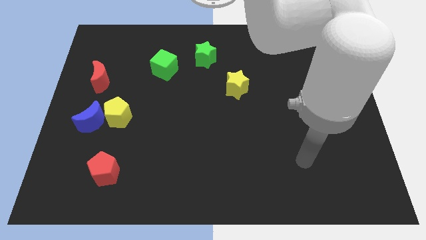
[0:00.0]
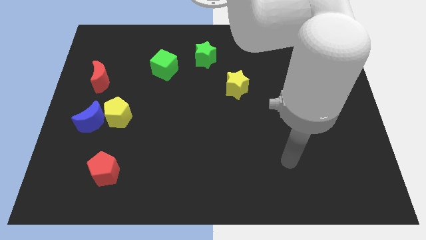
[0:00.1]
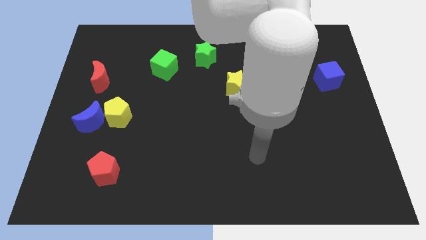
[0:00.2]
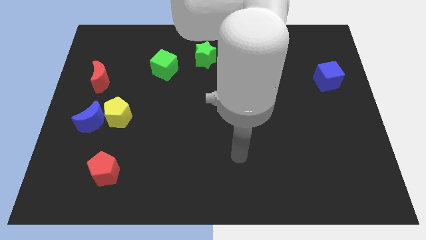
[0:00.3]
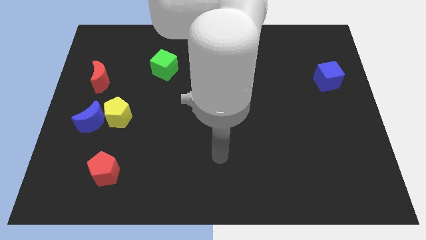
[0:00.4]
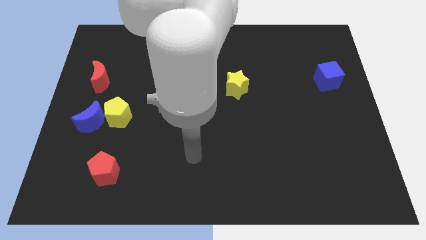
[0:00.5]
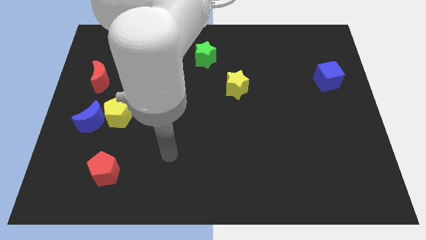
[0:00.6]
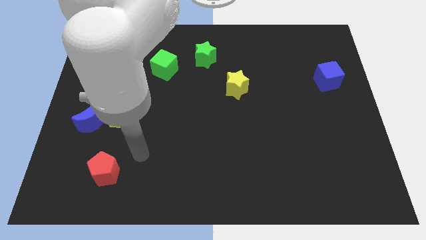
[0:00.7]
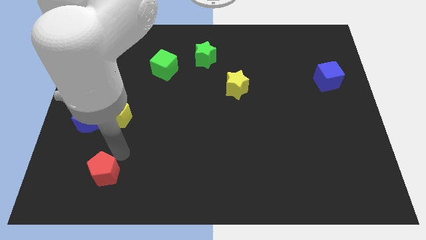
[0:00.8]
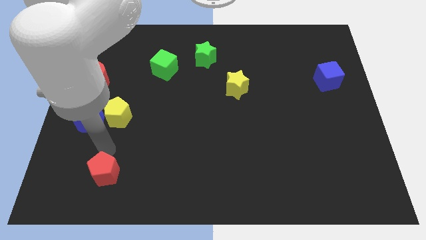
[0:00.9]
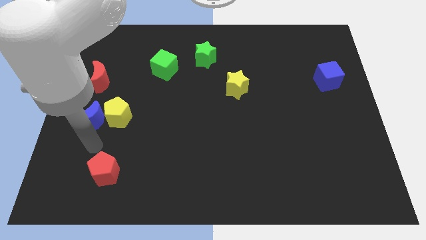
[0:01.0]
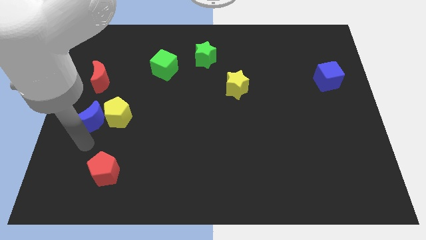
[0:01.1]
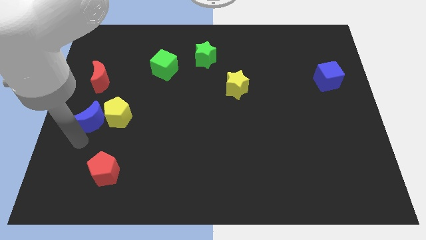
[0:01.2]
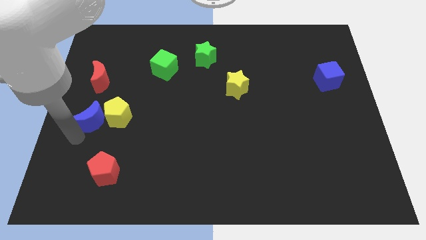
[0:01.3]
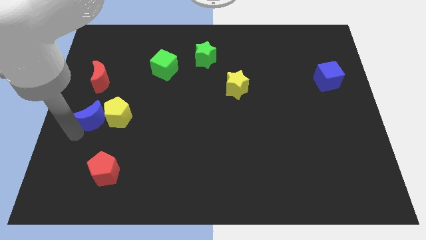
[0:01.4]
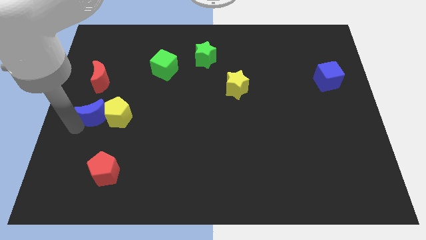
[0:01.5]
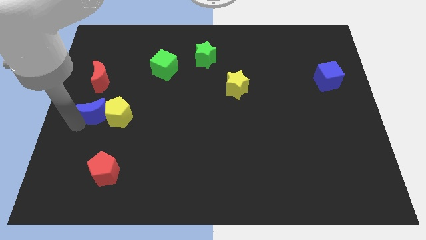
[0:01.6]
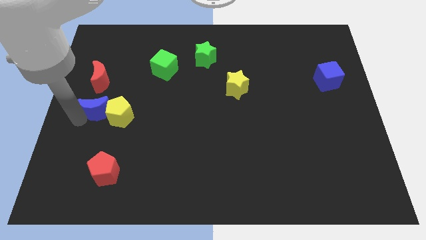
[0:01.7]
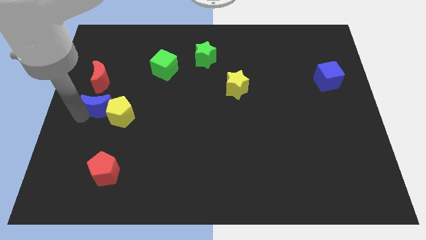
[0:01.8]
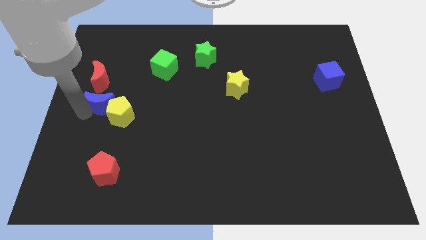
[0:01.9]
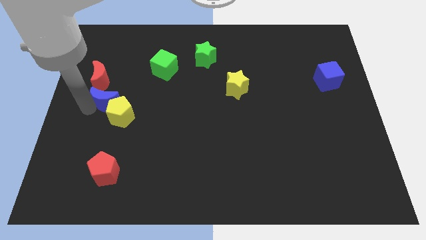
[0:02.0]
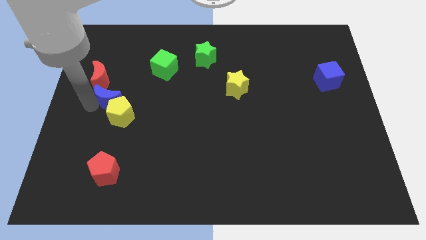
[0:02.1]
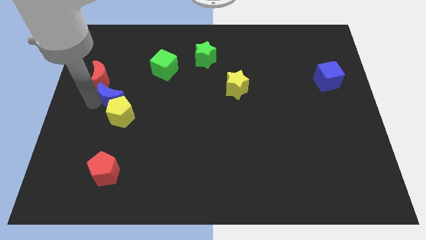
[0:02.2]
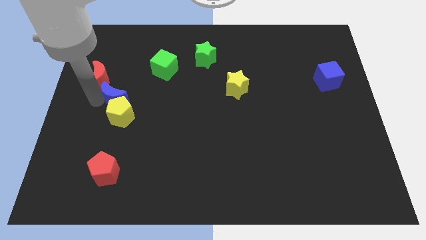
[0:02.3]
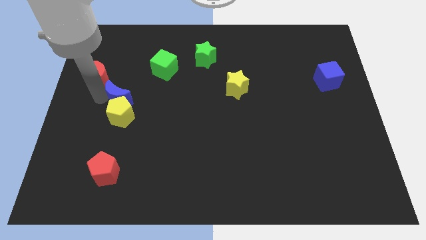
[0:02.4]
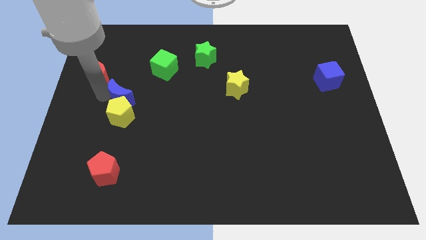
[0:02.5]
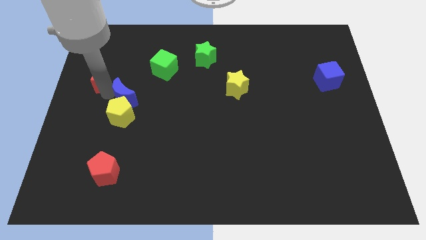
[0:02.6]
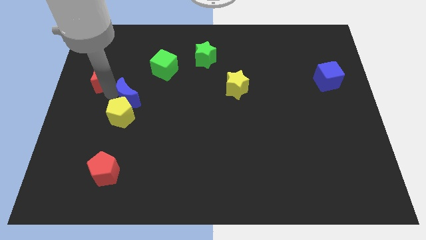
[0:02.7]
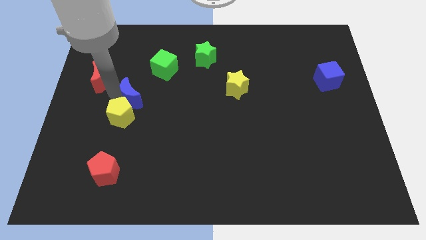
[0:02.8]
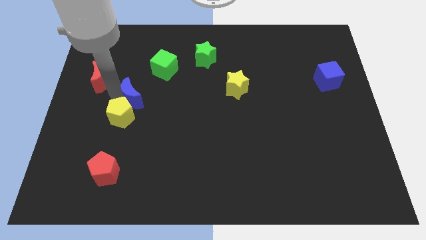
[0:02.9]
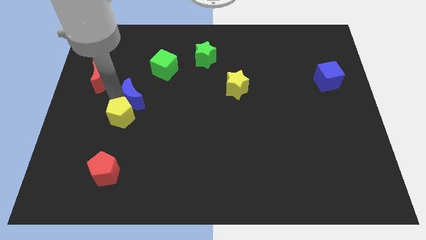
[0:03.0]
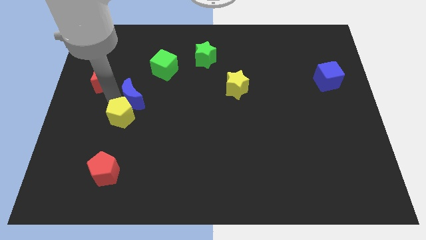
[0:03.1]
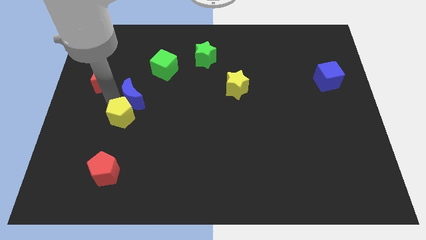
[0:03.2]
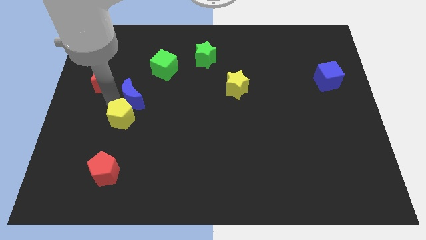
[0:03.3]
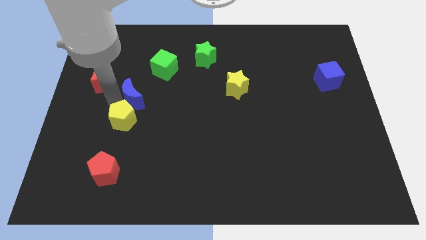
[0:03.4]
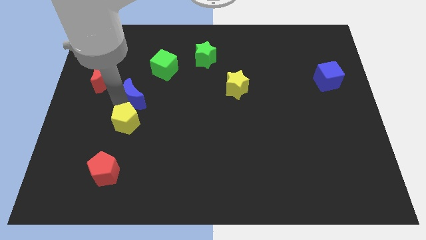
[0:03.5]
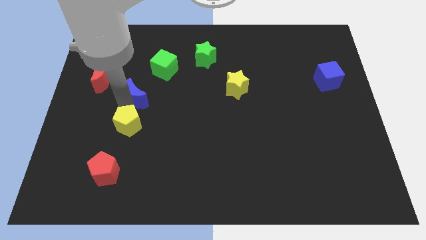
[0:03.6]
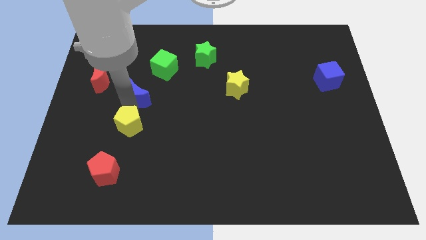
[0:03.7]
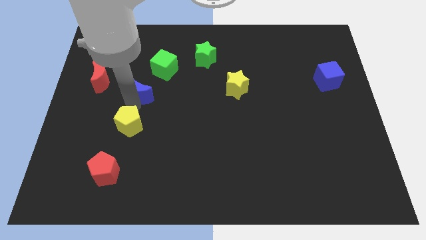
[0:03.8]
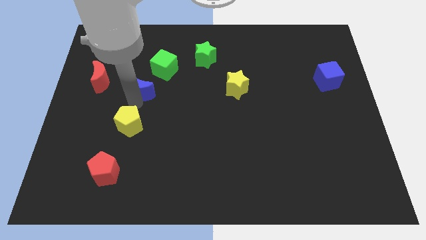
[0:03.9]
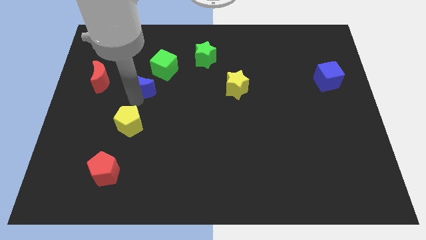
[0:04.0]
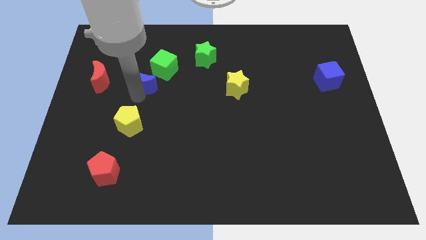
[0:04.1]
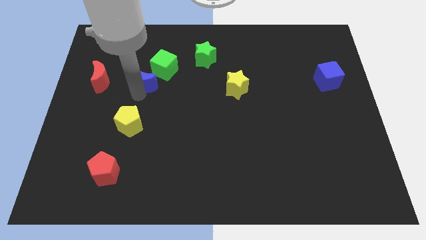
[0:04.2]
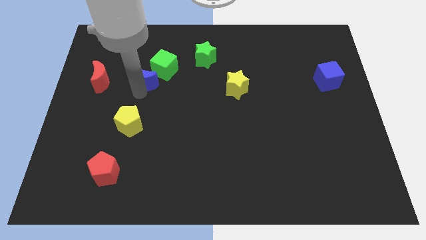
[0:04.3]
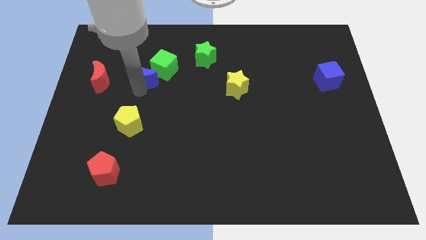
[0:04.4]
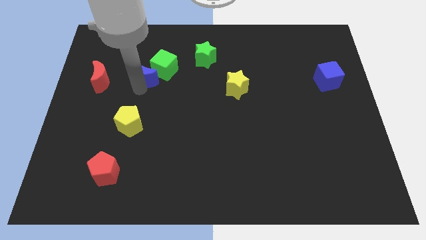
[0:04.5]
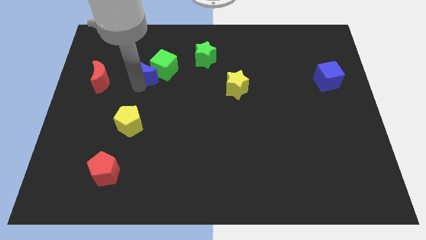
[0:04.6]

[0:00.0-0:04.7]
move the blue moon next to the green cube

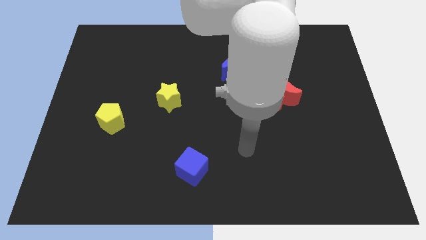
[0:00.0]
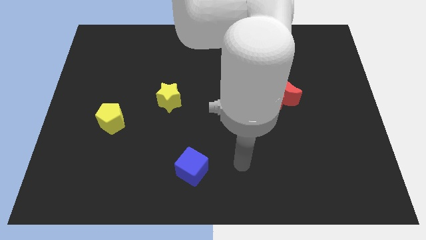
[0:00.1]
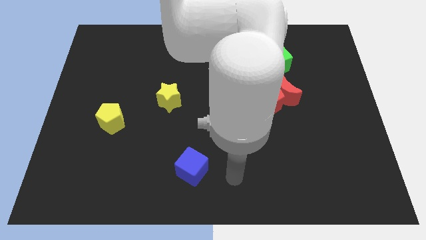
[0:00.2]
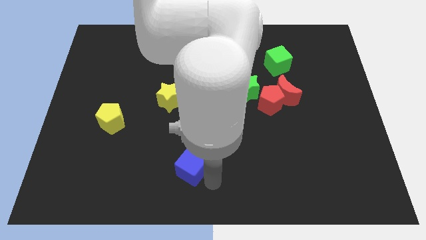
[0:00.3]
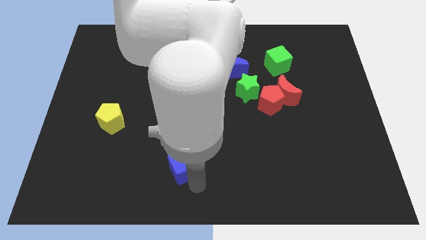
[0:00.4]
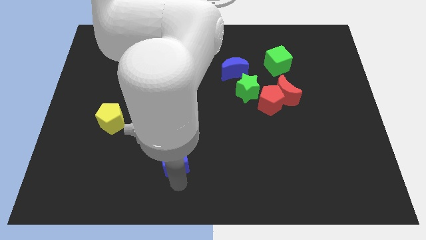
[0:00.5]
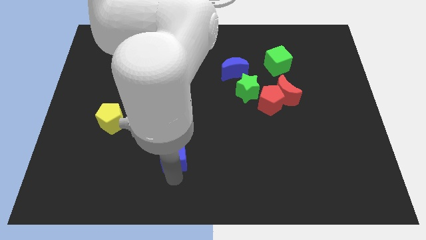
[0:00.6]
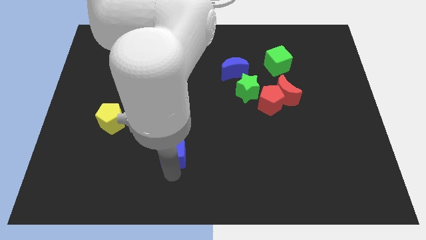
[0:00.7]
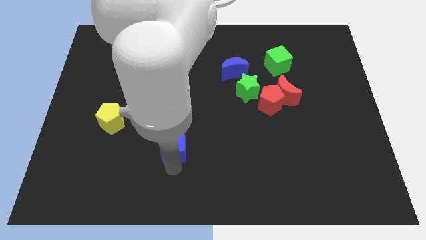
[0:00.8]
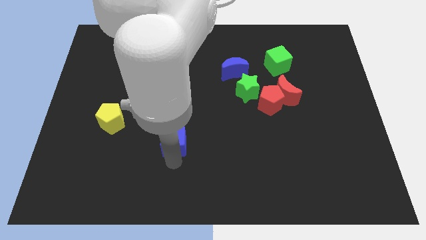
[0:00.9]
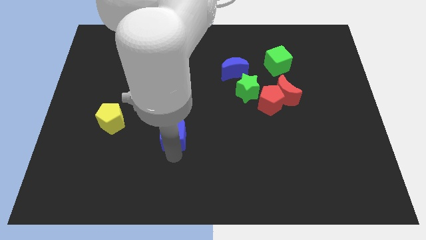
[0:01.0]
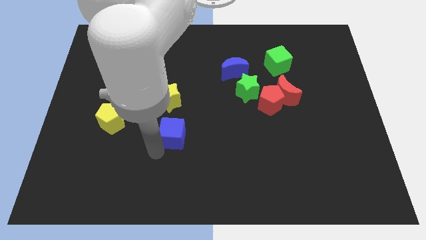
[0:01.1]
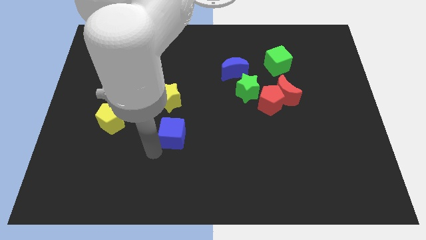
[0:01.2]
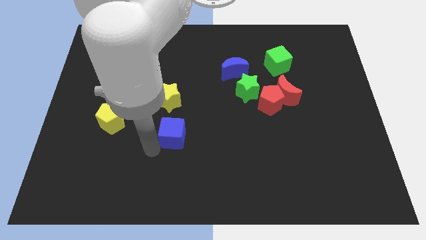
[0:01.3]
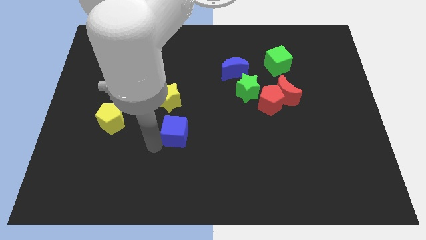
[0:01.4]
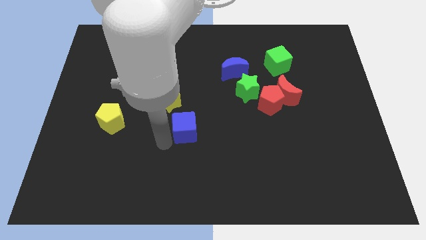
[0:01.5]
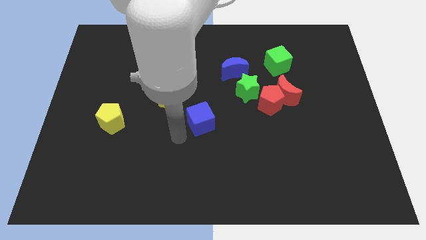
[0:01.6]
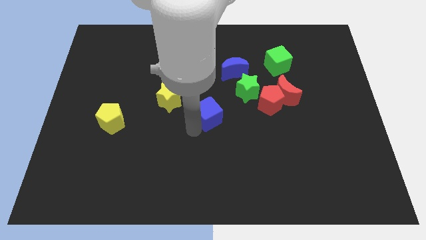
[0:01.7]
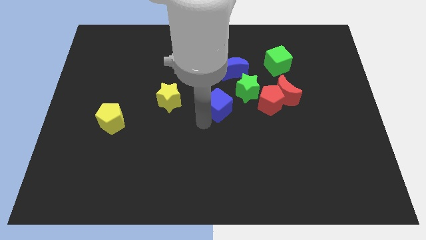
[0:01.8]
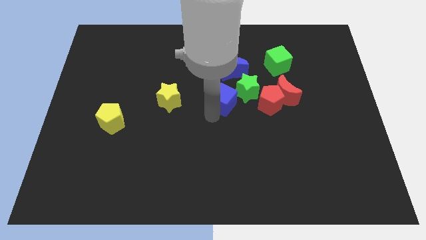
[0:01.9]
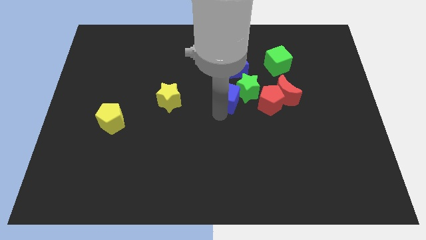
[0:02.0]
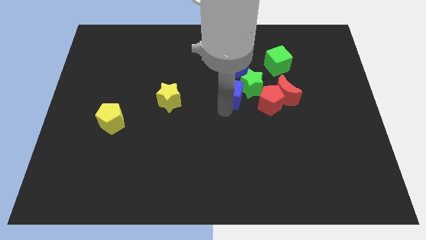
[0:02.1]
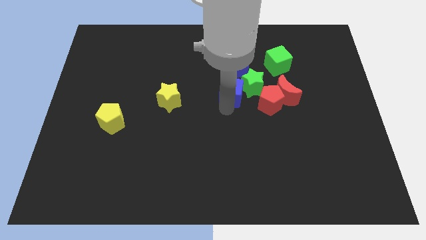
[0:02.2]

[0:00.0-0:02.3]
slide the blue cube close to the green star

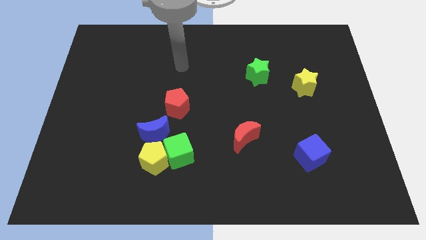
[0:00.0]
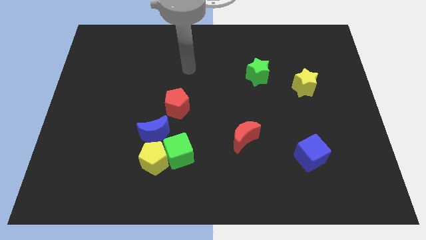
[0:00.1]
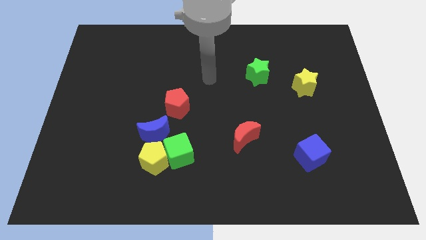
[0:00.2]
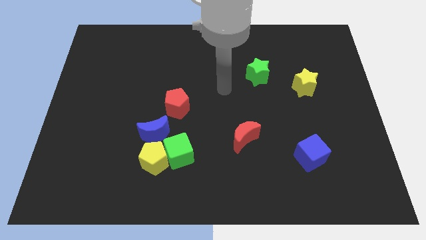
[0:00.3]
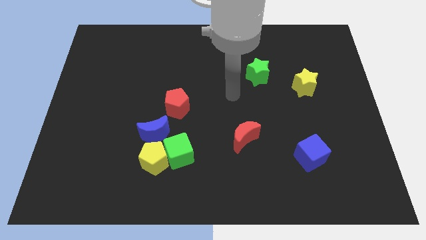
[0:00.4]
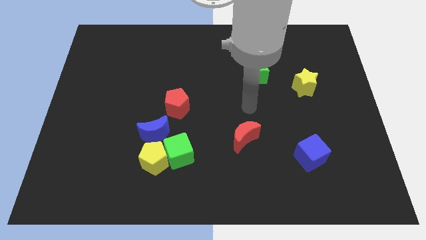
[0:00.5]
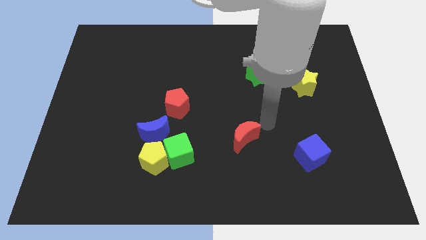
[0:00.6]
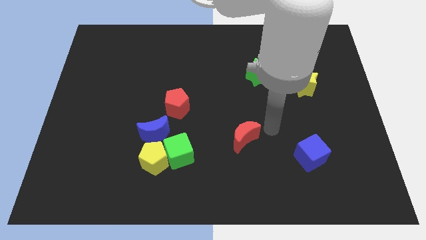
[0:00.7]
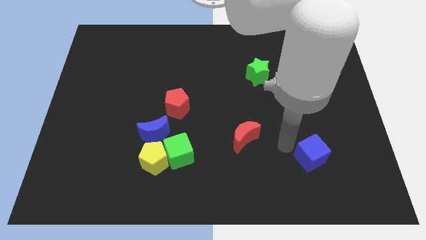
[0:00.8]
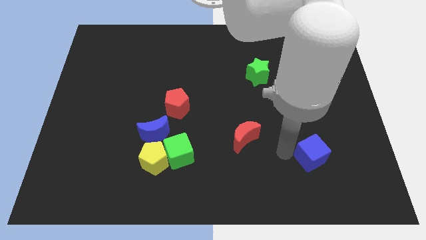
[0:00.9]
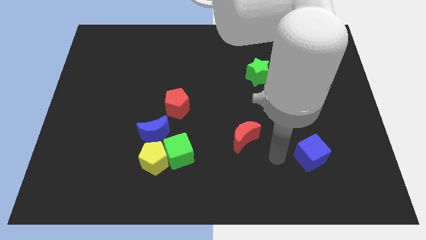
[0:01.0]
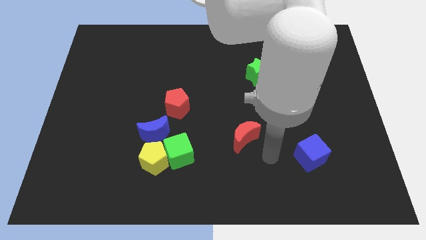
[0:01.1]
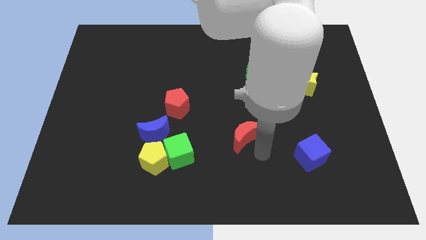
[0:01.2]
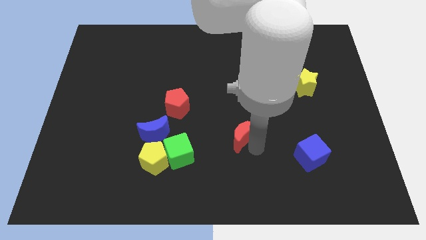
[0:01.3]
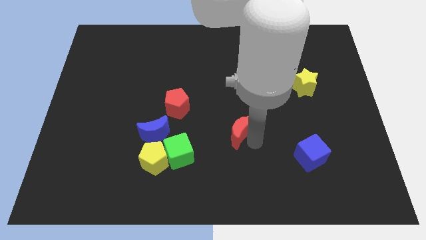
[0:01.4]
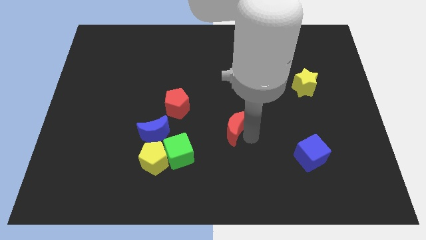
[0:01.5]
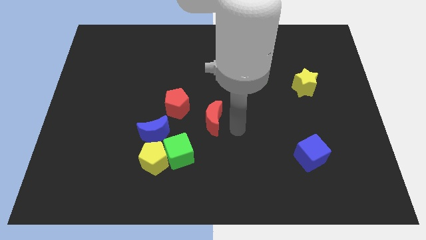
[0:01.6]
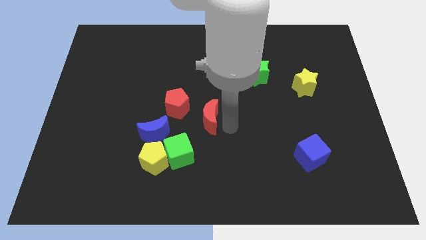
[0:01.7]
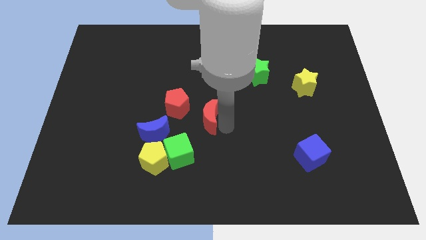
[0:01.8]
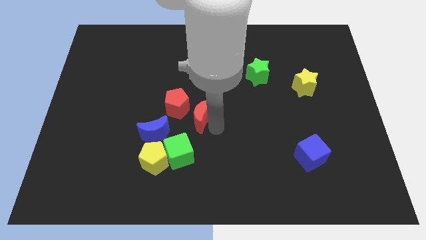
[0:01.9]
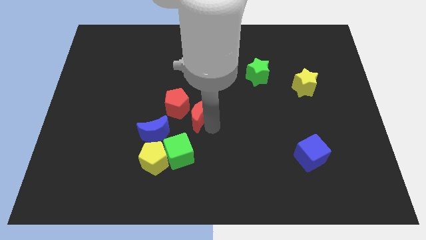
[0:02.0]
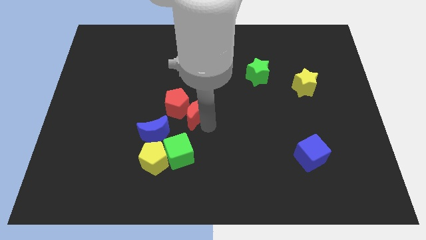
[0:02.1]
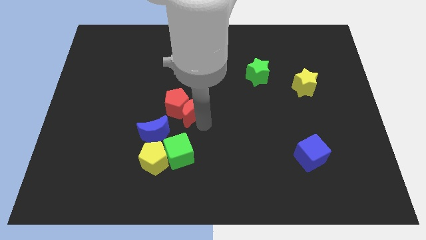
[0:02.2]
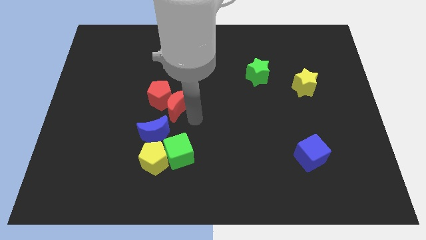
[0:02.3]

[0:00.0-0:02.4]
push the red moon next to the red pentagon
